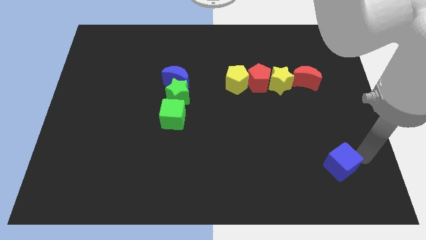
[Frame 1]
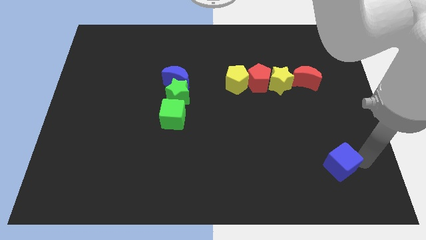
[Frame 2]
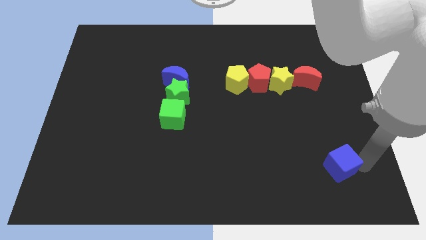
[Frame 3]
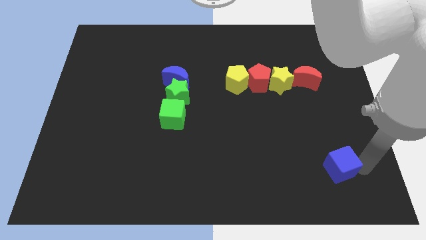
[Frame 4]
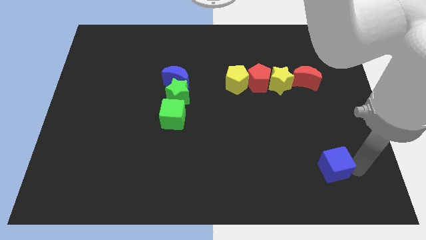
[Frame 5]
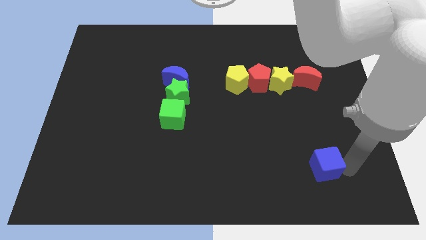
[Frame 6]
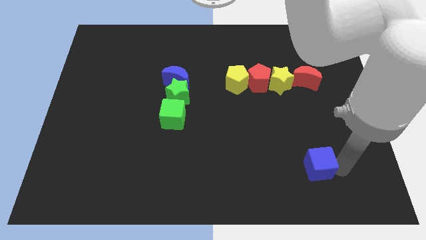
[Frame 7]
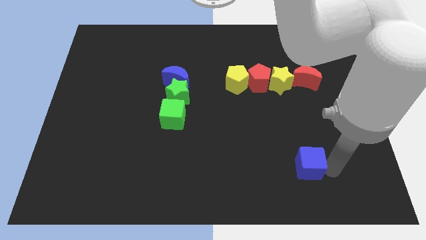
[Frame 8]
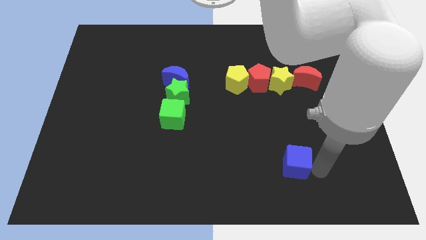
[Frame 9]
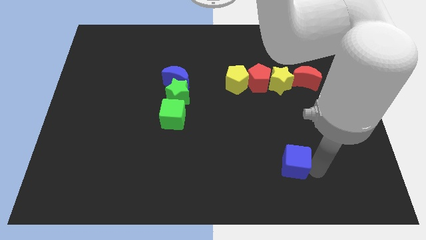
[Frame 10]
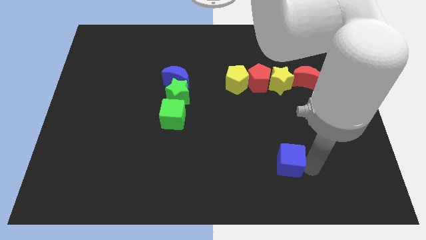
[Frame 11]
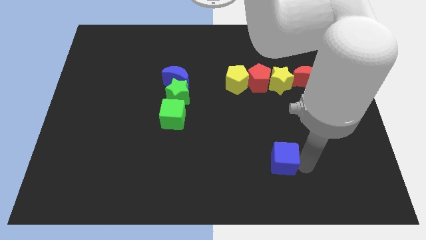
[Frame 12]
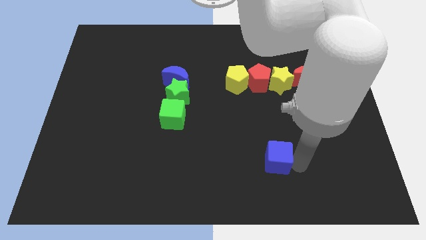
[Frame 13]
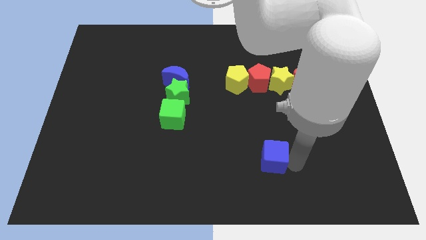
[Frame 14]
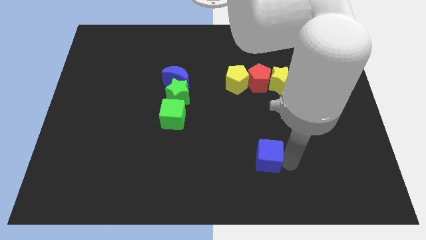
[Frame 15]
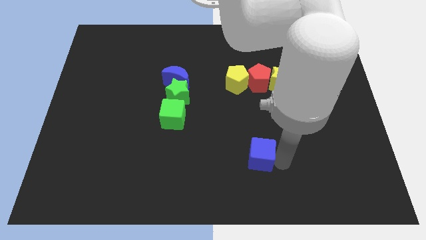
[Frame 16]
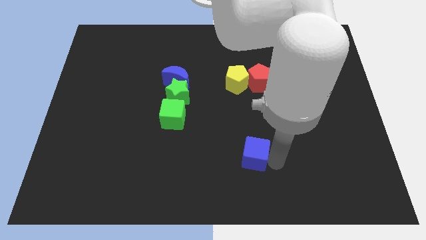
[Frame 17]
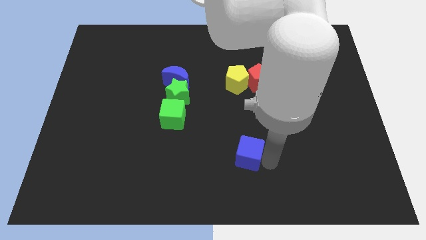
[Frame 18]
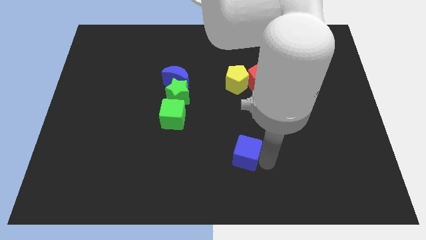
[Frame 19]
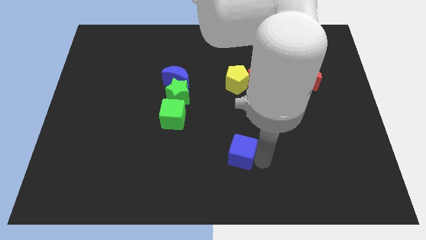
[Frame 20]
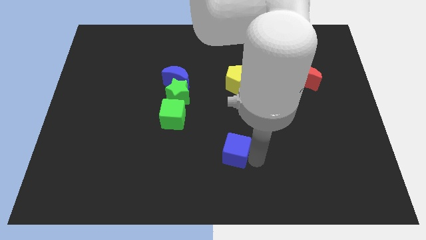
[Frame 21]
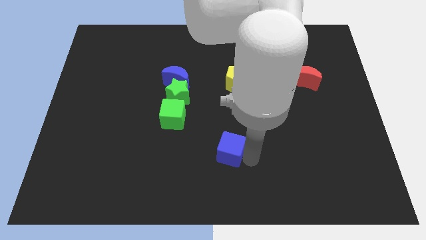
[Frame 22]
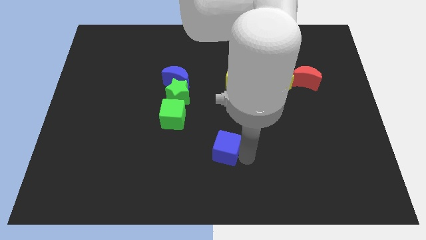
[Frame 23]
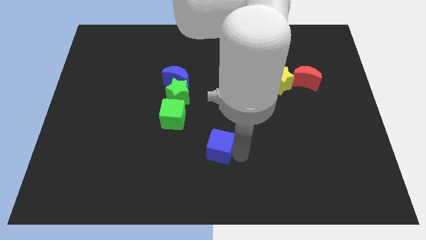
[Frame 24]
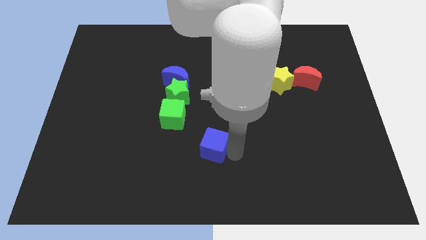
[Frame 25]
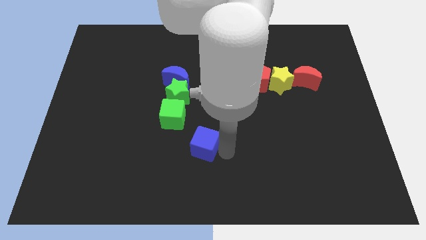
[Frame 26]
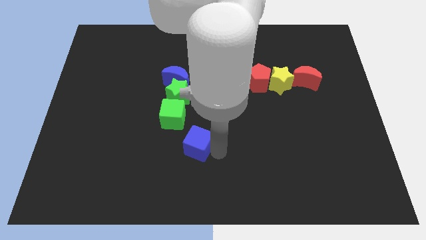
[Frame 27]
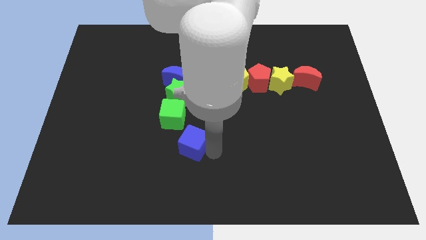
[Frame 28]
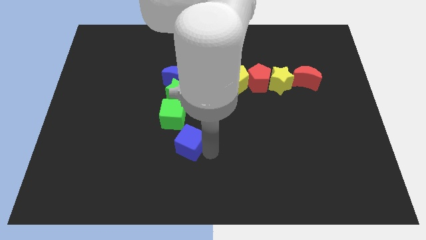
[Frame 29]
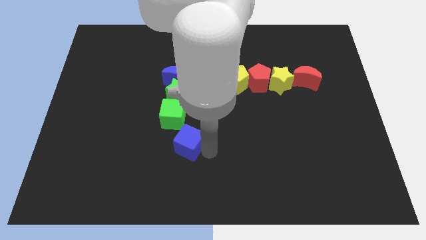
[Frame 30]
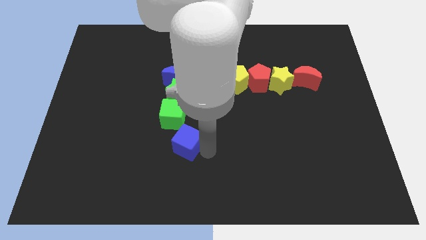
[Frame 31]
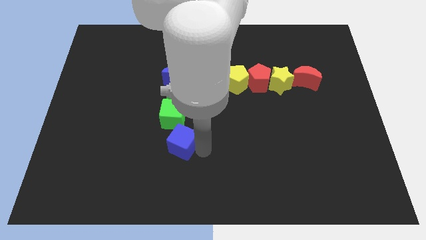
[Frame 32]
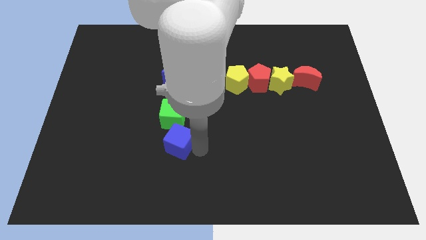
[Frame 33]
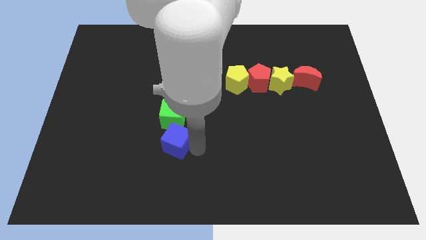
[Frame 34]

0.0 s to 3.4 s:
push the blue cube to the bottom side of the green cube

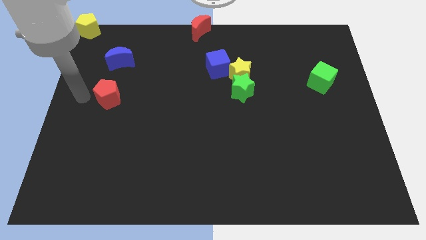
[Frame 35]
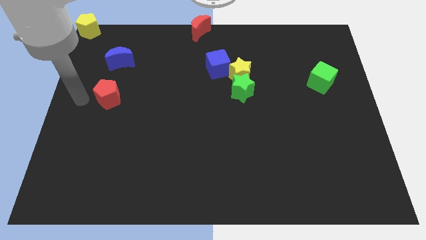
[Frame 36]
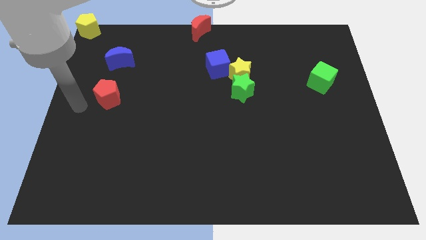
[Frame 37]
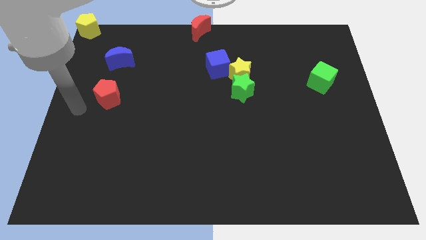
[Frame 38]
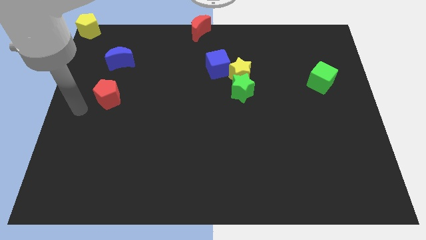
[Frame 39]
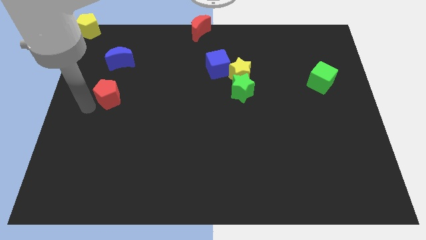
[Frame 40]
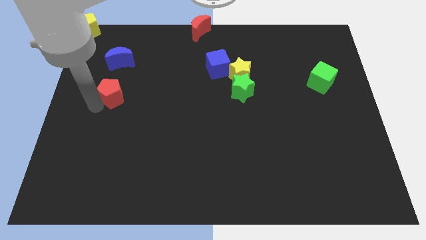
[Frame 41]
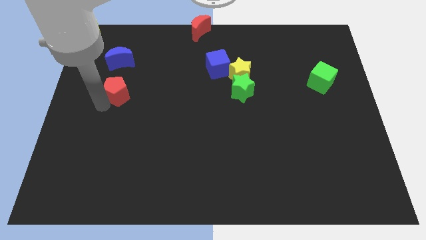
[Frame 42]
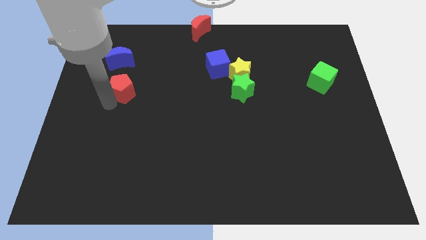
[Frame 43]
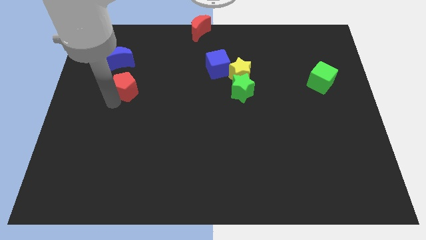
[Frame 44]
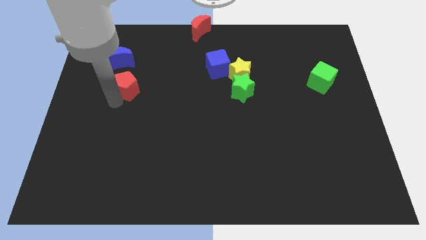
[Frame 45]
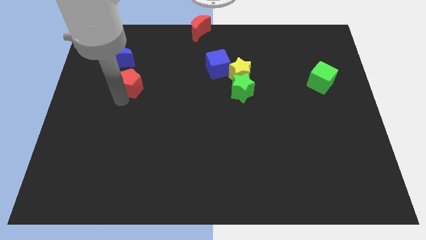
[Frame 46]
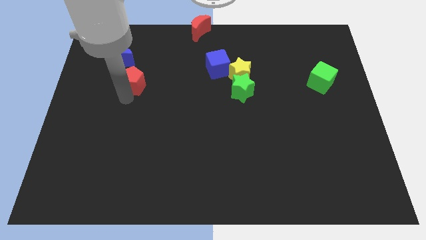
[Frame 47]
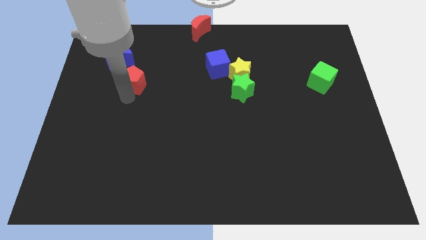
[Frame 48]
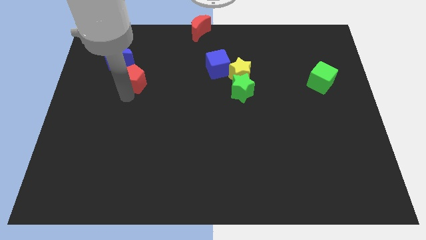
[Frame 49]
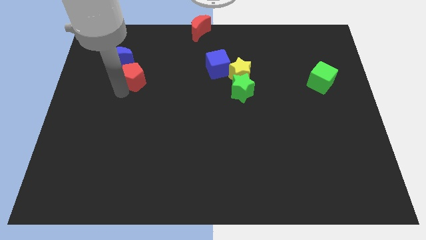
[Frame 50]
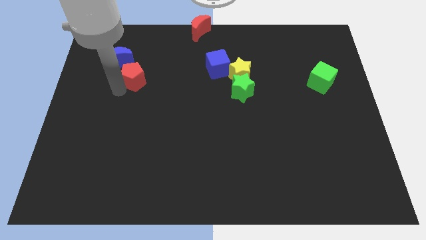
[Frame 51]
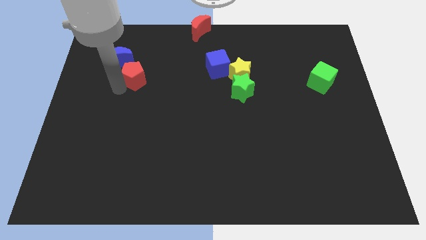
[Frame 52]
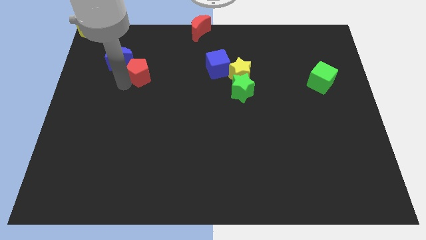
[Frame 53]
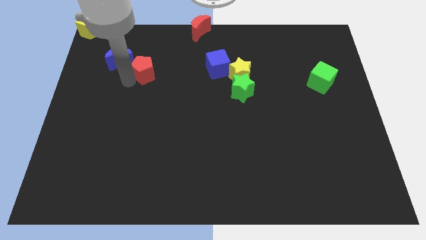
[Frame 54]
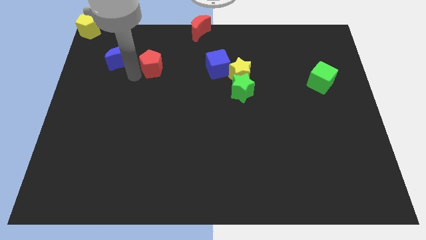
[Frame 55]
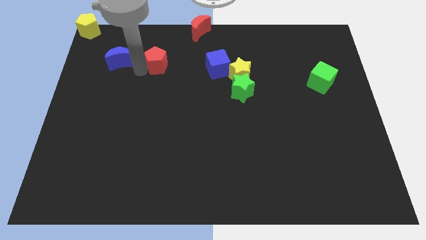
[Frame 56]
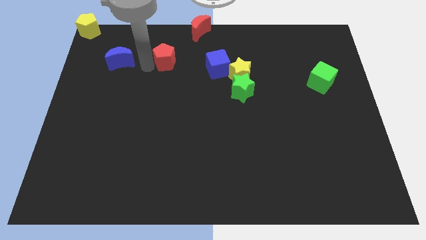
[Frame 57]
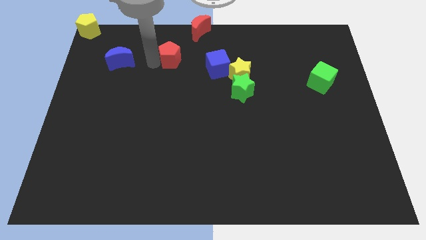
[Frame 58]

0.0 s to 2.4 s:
push red pentagon beside blue crescent

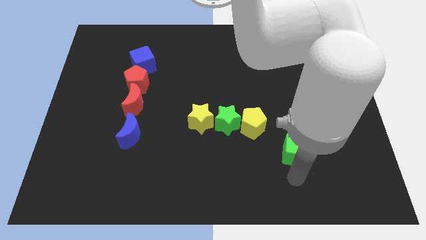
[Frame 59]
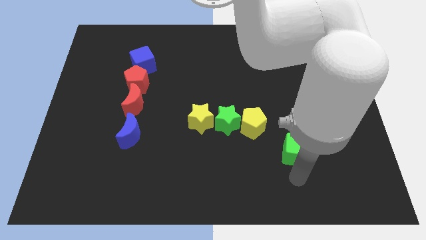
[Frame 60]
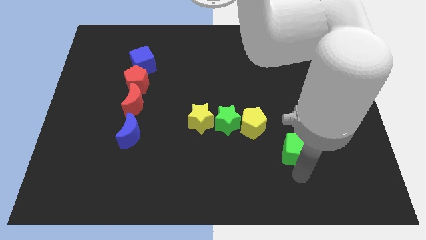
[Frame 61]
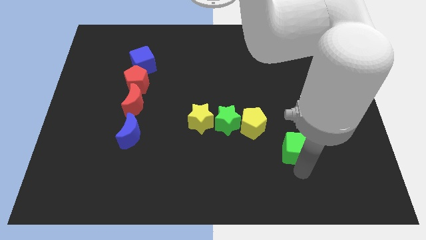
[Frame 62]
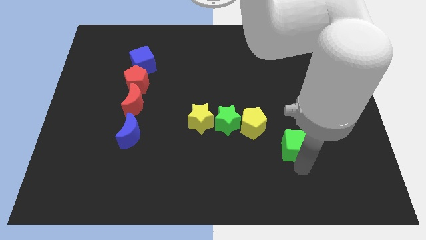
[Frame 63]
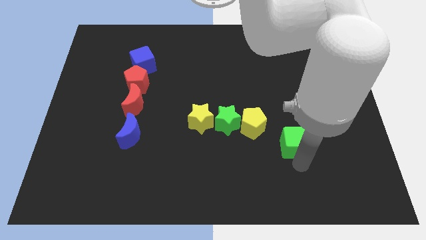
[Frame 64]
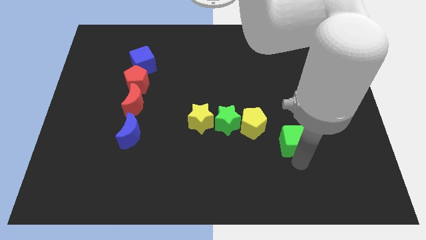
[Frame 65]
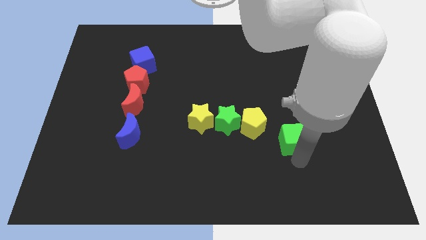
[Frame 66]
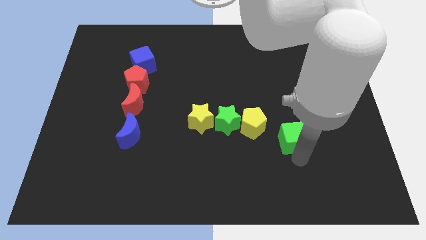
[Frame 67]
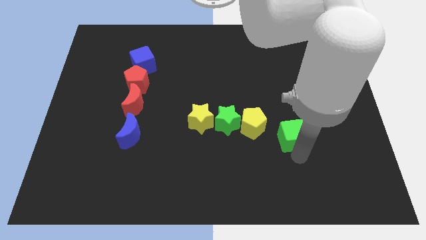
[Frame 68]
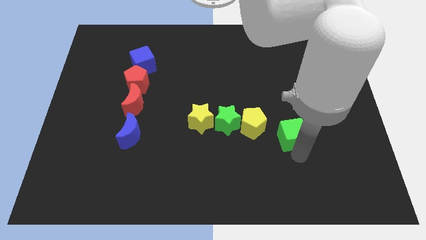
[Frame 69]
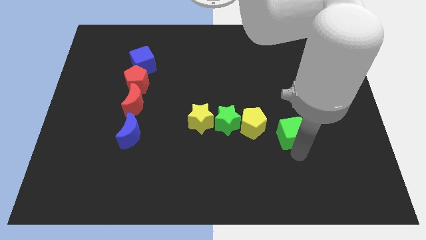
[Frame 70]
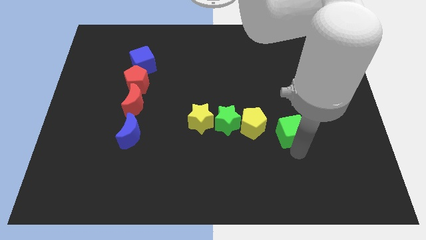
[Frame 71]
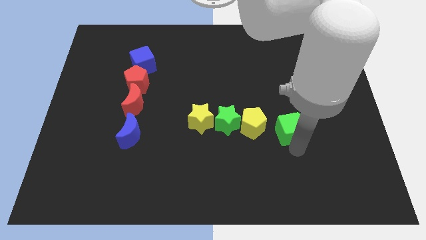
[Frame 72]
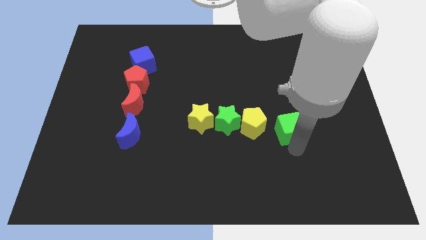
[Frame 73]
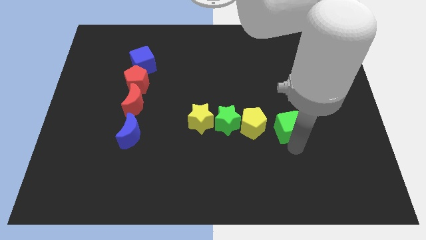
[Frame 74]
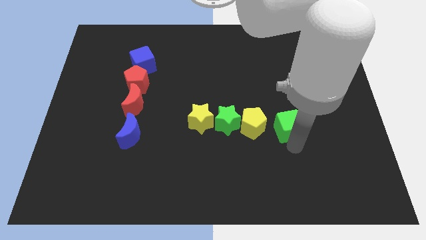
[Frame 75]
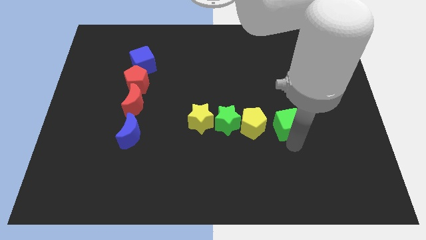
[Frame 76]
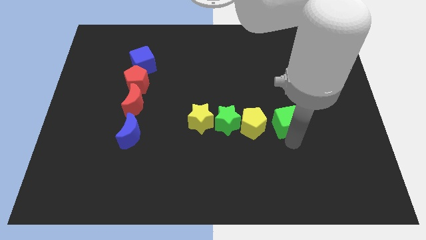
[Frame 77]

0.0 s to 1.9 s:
place the green cube at the right side of the horizontal line of blocks

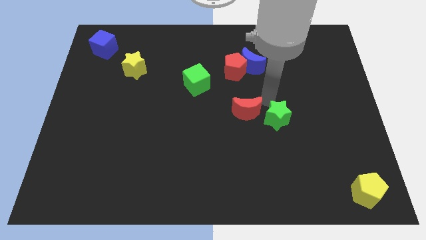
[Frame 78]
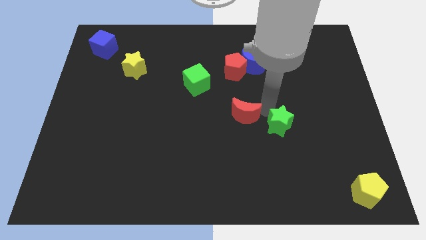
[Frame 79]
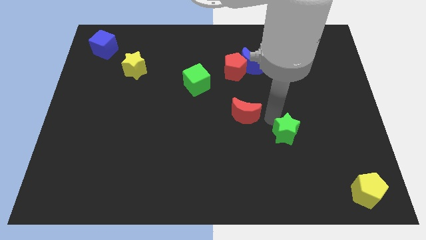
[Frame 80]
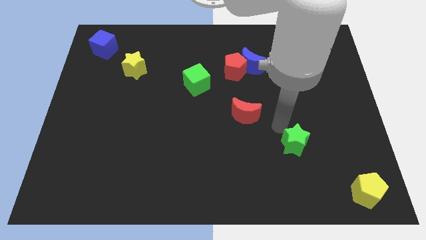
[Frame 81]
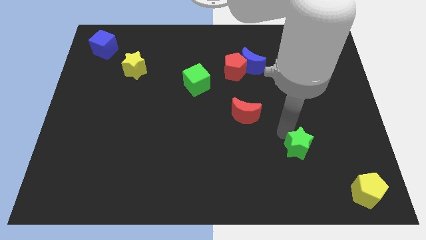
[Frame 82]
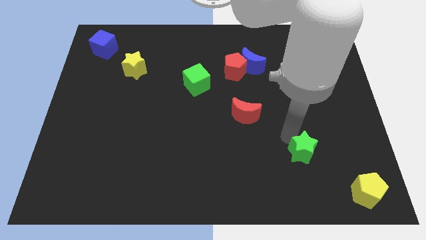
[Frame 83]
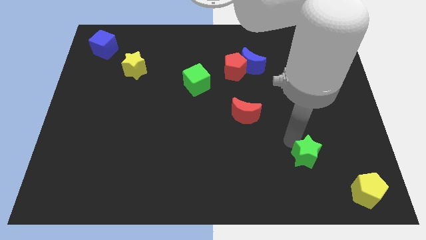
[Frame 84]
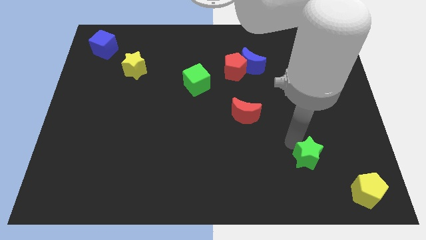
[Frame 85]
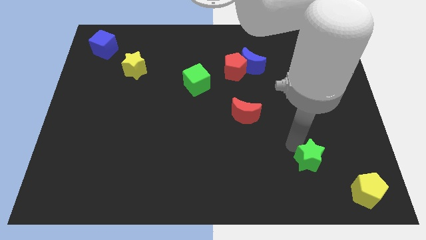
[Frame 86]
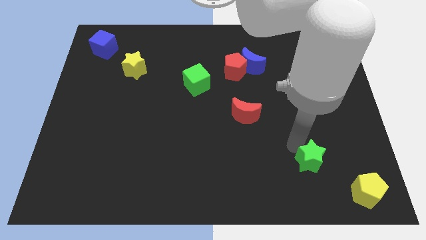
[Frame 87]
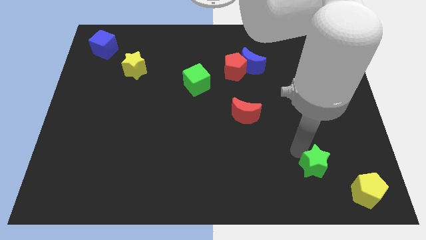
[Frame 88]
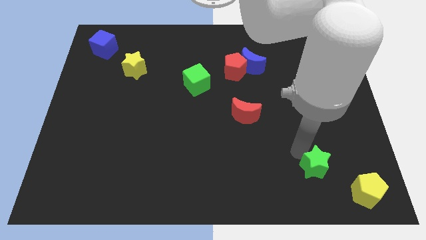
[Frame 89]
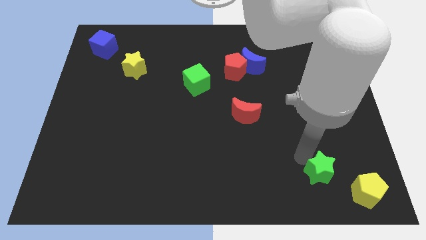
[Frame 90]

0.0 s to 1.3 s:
move the green star to the bottom of the board

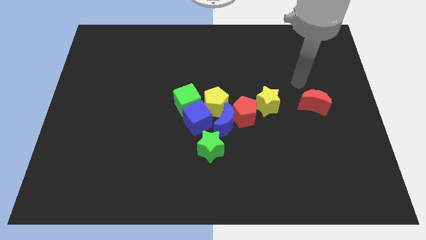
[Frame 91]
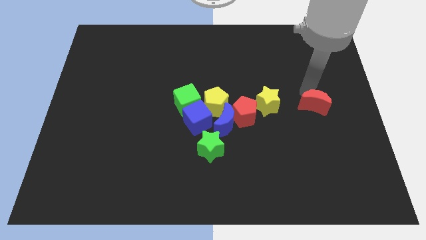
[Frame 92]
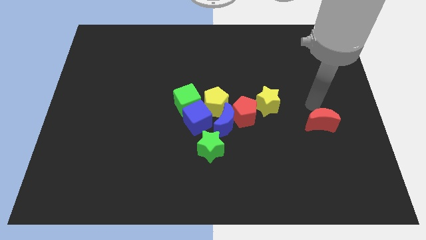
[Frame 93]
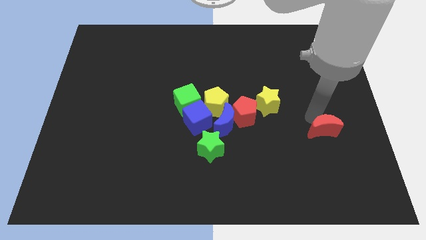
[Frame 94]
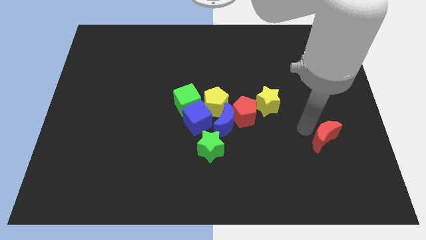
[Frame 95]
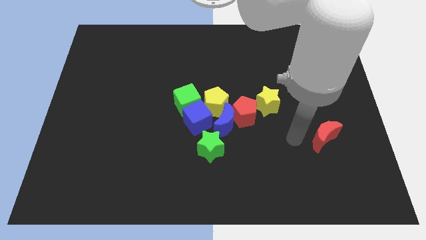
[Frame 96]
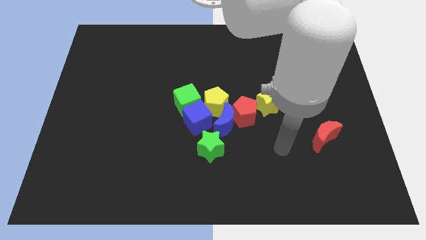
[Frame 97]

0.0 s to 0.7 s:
push the red moon downwards
